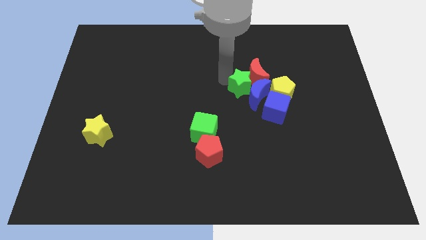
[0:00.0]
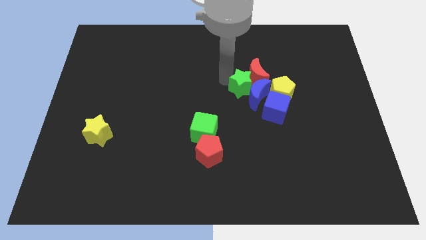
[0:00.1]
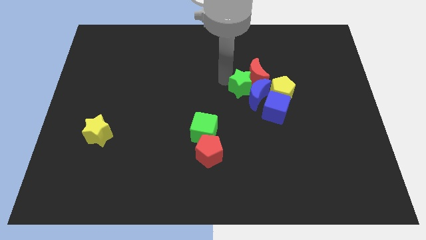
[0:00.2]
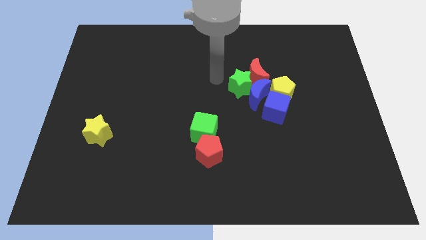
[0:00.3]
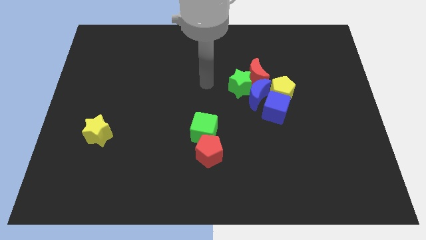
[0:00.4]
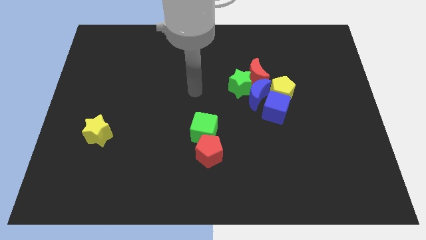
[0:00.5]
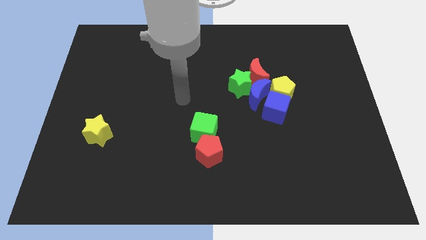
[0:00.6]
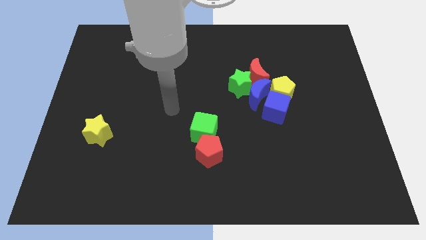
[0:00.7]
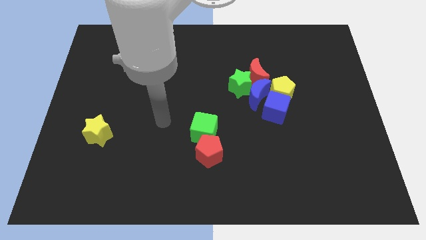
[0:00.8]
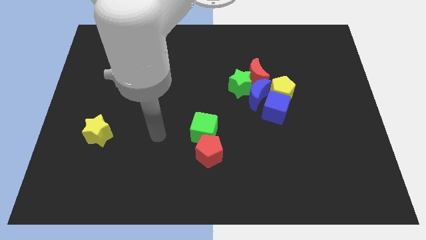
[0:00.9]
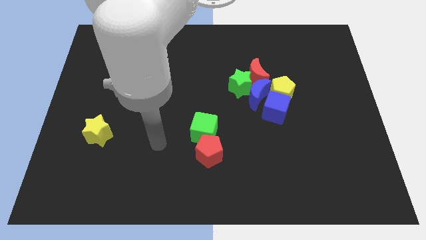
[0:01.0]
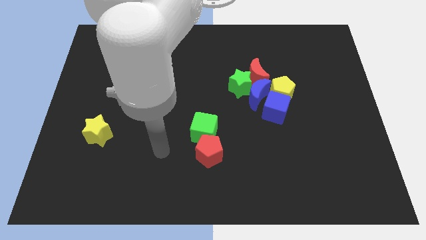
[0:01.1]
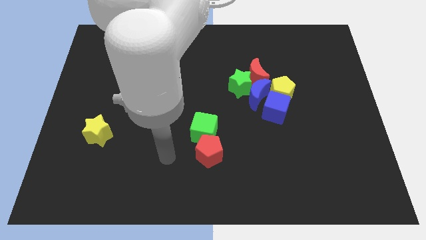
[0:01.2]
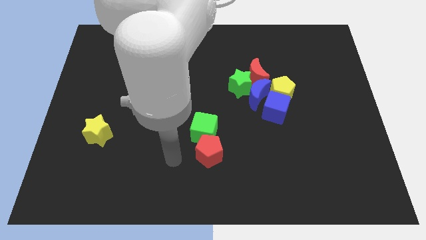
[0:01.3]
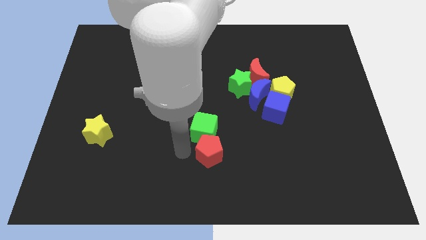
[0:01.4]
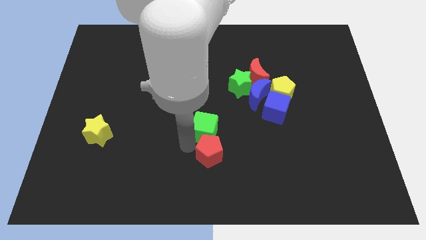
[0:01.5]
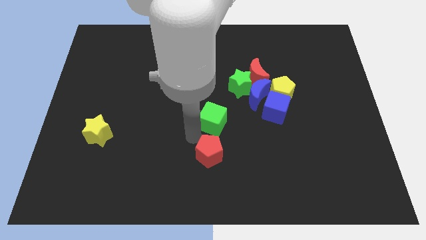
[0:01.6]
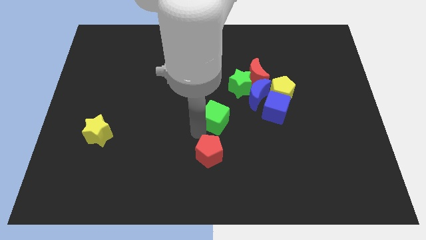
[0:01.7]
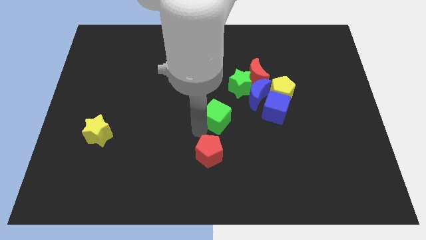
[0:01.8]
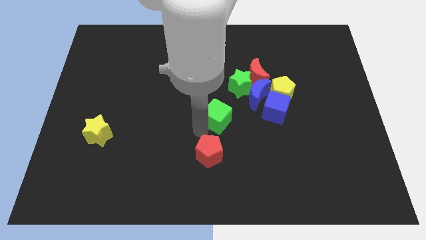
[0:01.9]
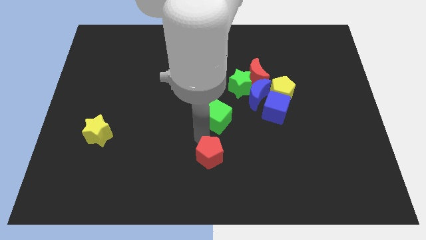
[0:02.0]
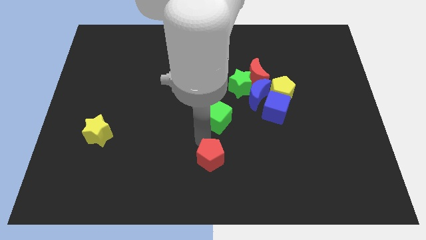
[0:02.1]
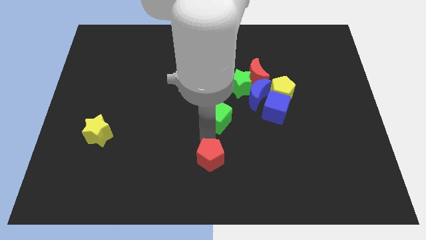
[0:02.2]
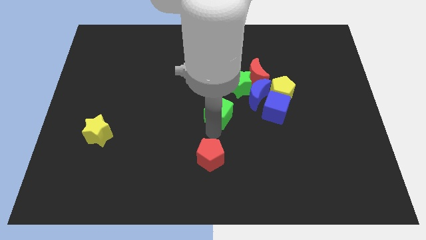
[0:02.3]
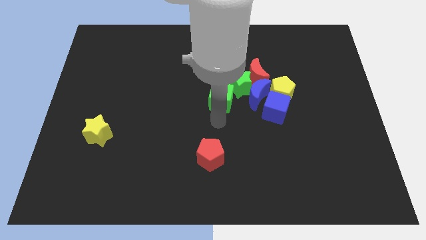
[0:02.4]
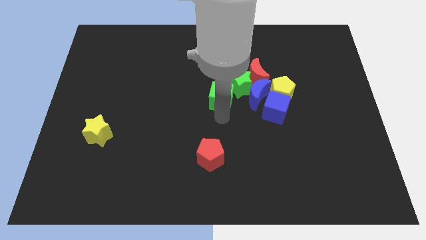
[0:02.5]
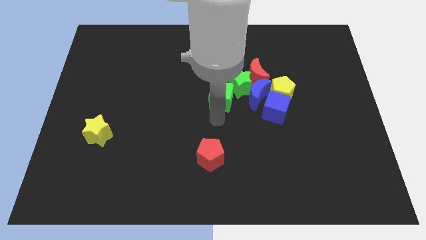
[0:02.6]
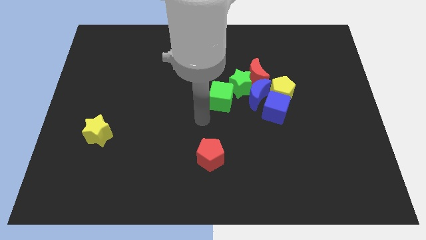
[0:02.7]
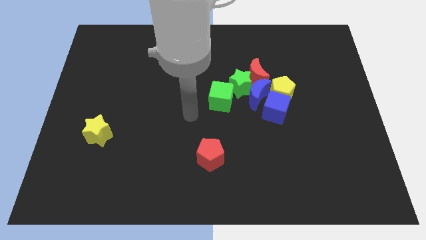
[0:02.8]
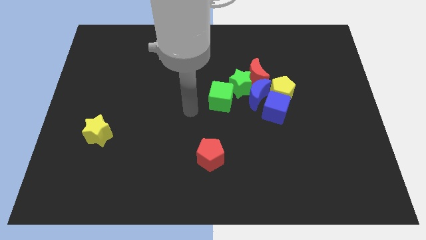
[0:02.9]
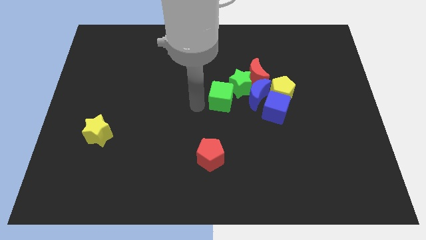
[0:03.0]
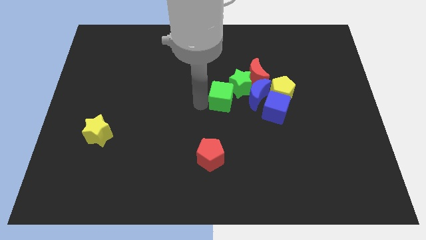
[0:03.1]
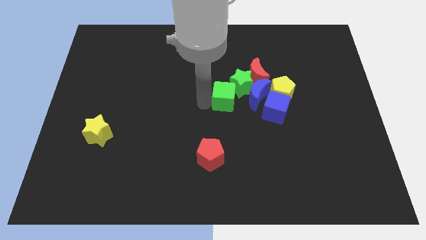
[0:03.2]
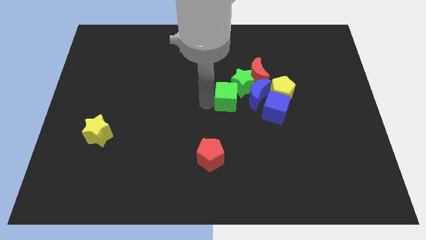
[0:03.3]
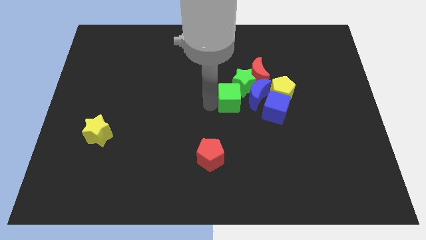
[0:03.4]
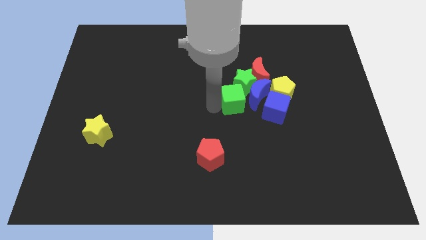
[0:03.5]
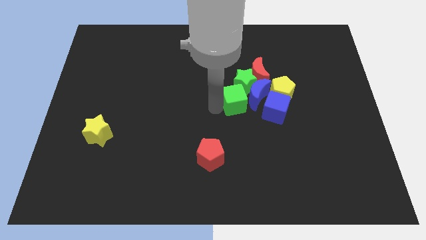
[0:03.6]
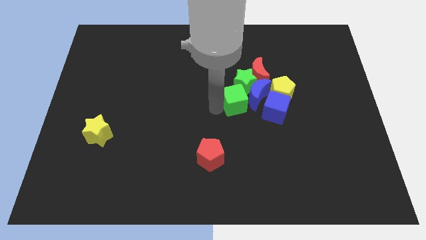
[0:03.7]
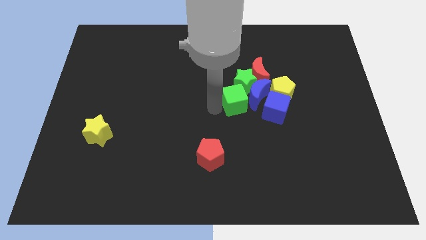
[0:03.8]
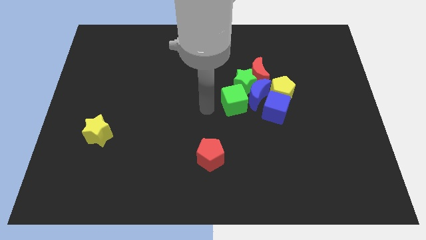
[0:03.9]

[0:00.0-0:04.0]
push the green cube into the group of blocks

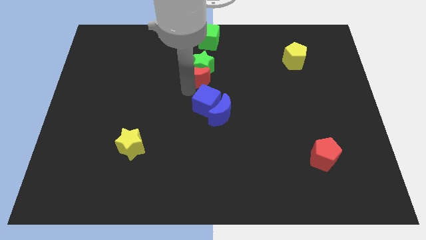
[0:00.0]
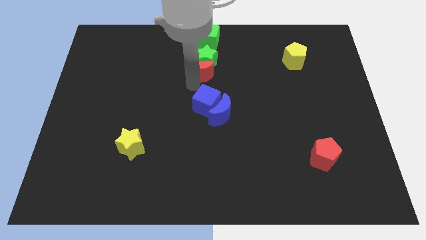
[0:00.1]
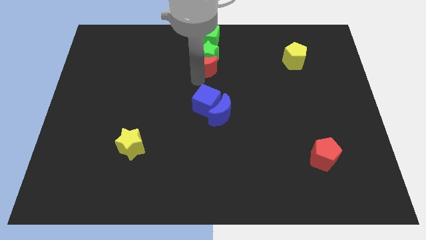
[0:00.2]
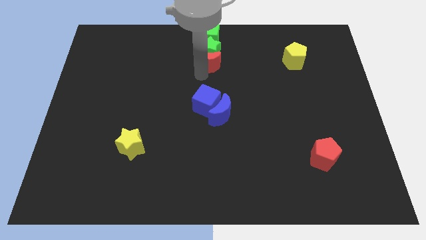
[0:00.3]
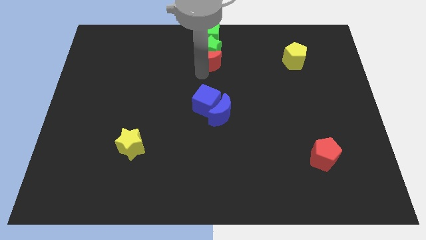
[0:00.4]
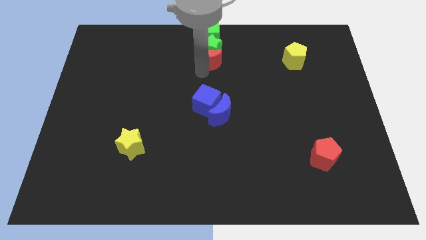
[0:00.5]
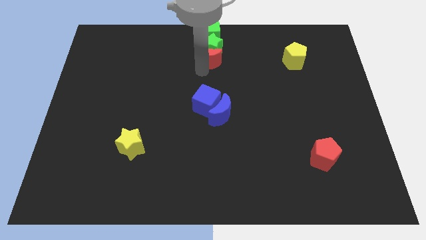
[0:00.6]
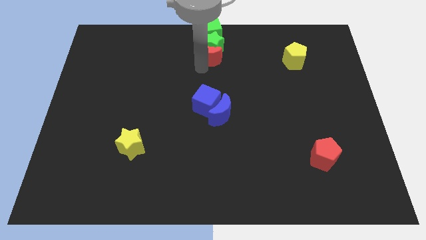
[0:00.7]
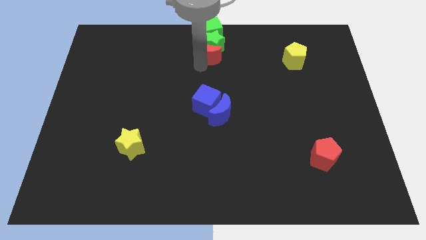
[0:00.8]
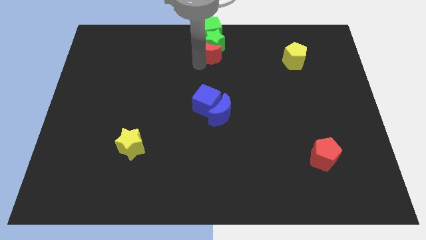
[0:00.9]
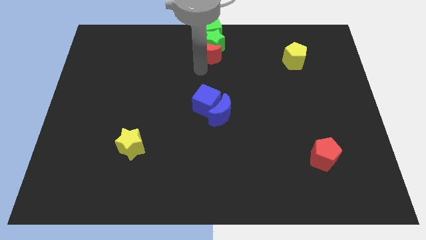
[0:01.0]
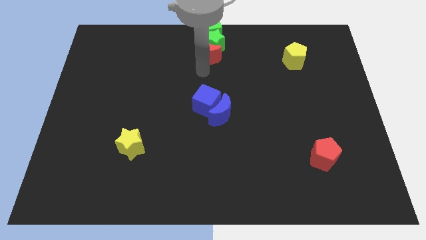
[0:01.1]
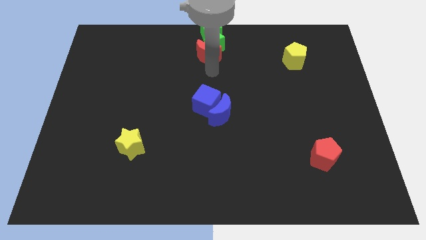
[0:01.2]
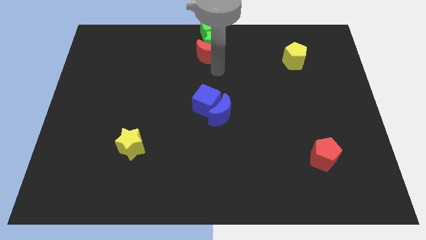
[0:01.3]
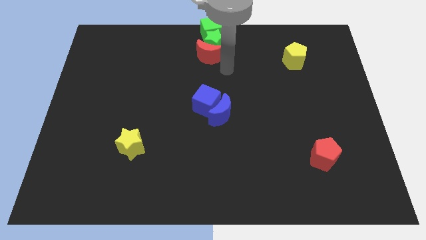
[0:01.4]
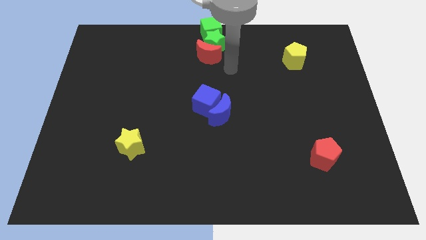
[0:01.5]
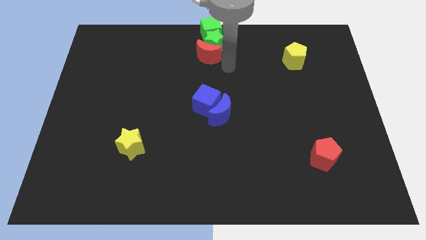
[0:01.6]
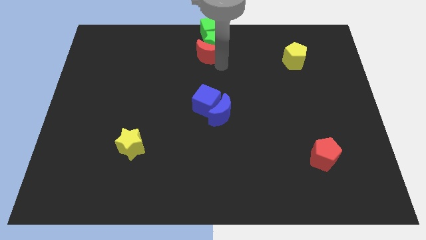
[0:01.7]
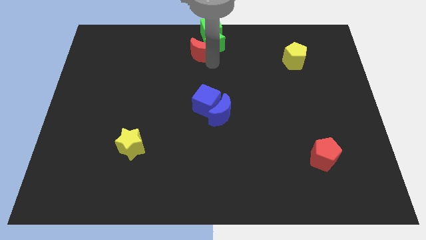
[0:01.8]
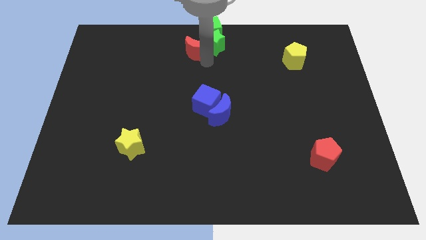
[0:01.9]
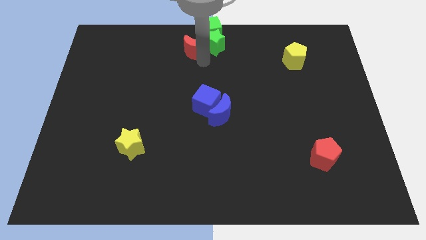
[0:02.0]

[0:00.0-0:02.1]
push the red moon to bottom left of green star

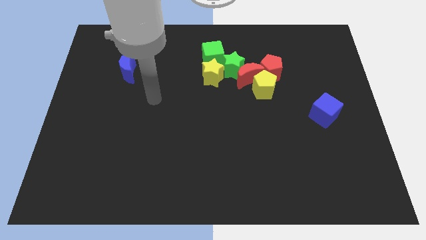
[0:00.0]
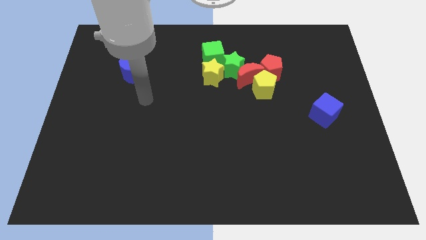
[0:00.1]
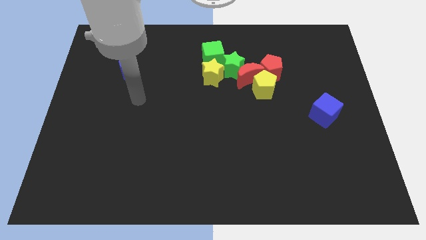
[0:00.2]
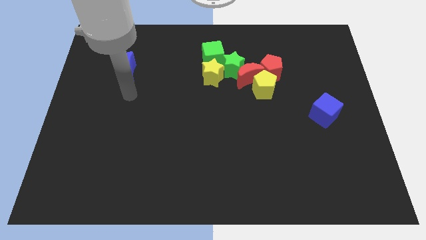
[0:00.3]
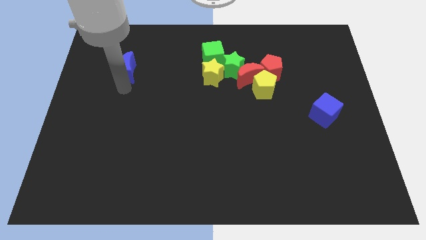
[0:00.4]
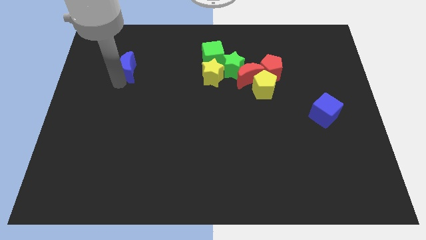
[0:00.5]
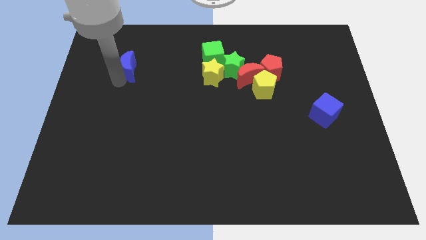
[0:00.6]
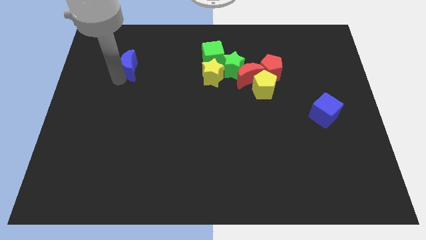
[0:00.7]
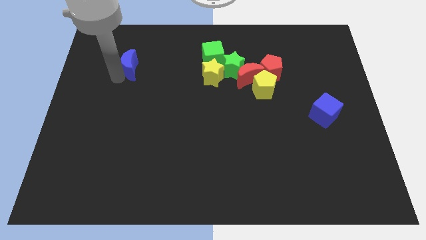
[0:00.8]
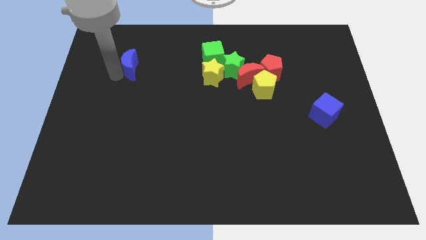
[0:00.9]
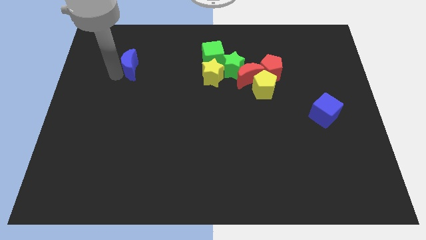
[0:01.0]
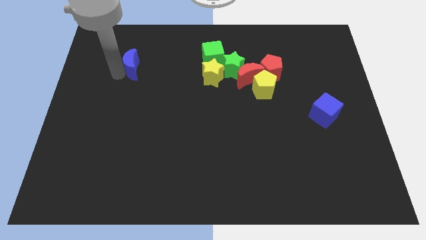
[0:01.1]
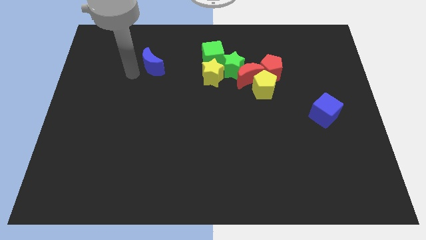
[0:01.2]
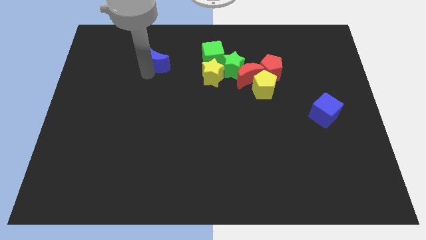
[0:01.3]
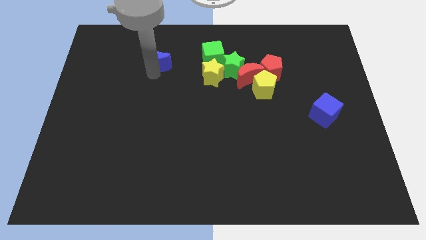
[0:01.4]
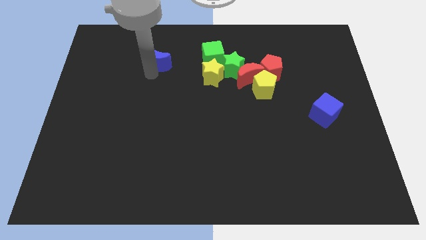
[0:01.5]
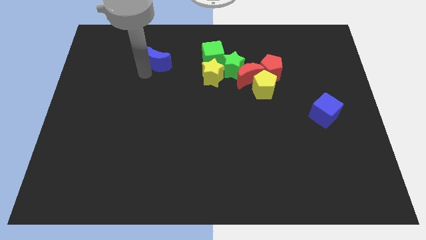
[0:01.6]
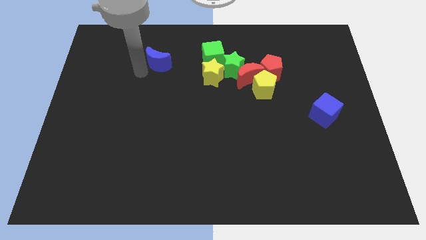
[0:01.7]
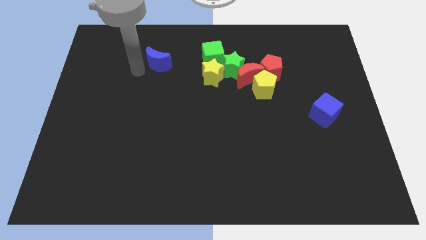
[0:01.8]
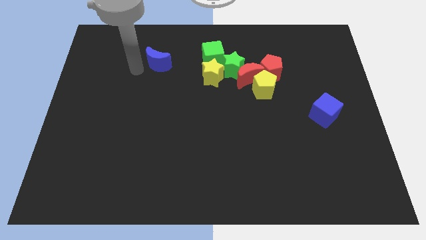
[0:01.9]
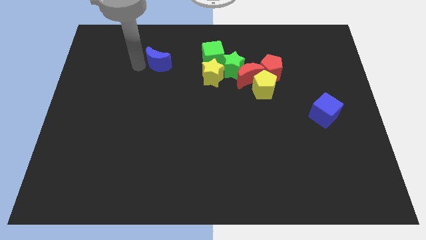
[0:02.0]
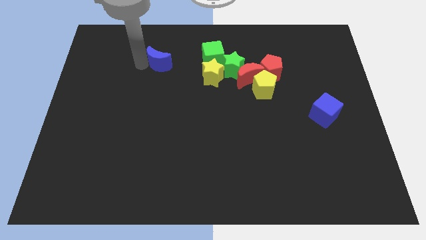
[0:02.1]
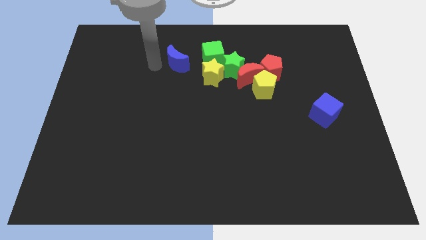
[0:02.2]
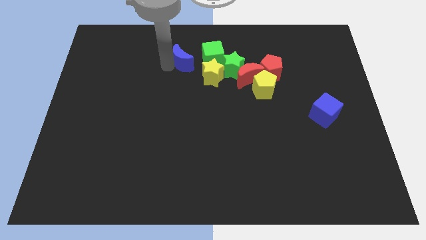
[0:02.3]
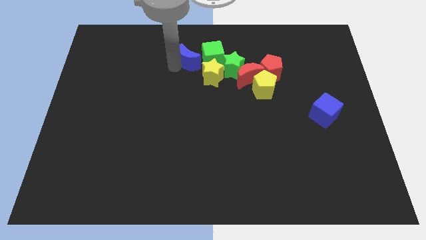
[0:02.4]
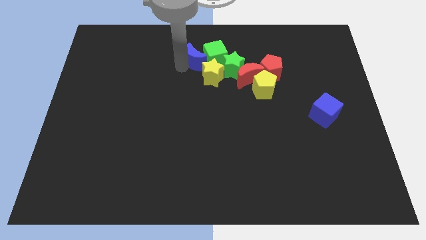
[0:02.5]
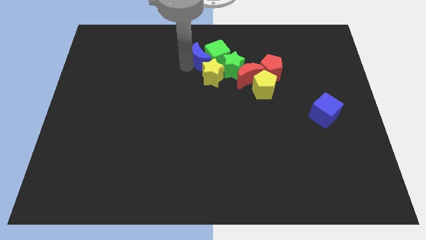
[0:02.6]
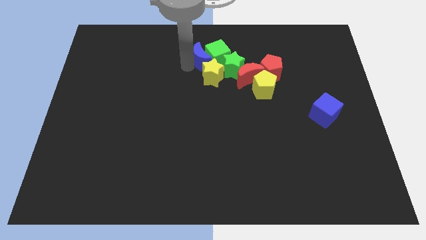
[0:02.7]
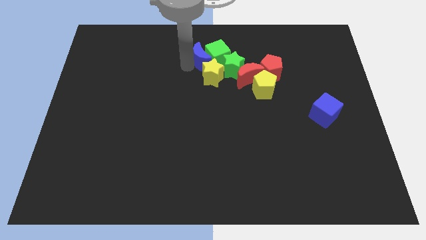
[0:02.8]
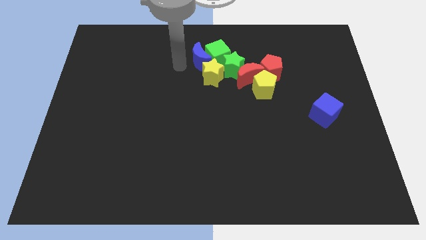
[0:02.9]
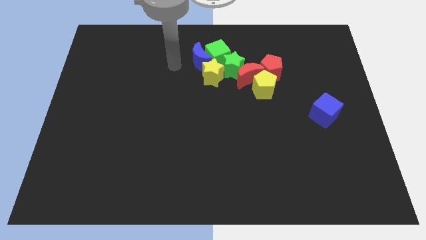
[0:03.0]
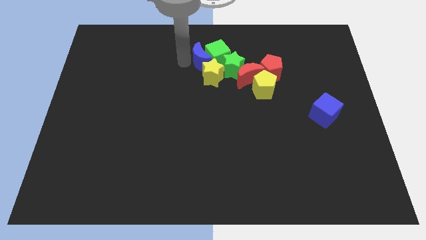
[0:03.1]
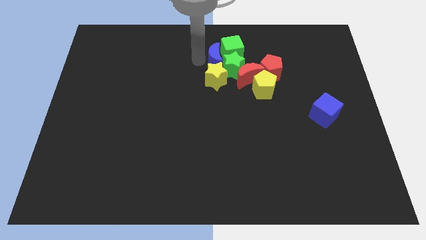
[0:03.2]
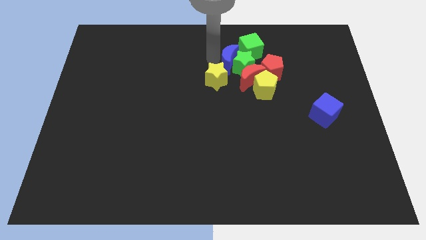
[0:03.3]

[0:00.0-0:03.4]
slide the blue moon into the green star
